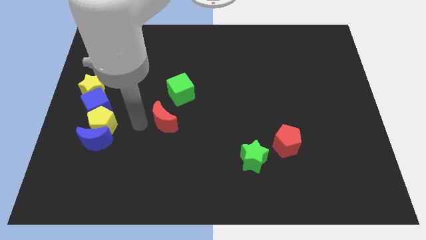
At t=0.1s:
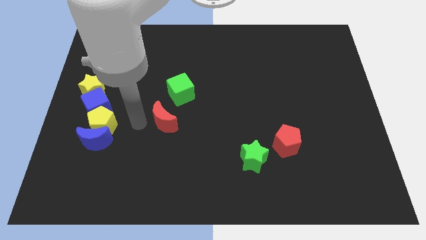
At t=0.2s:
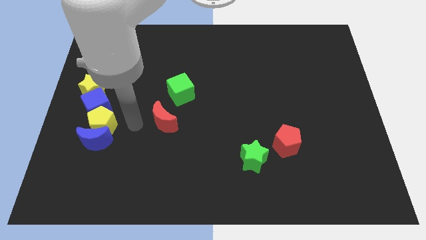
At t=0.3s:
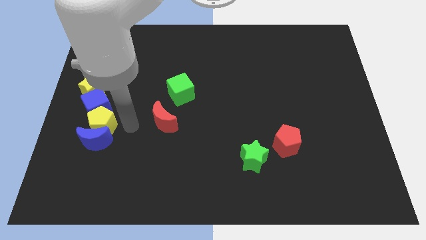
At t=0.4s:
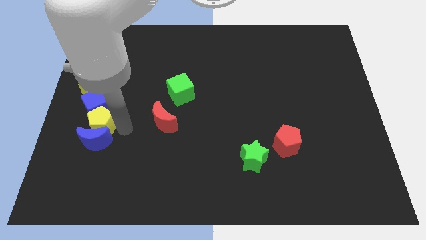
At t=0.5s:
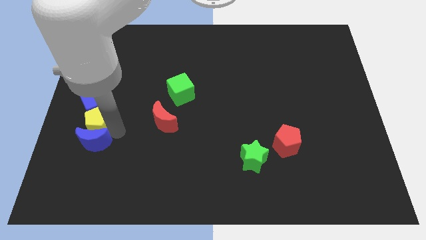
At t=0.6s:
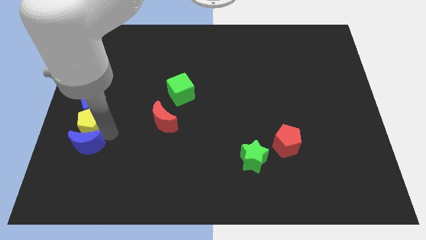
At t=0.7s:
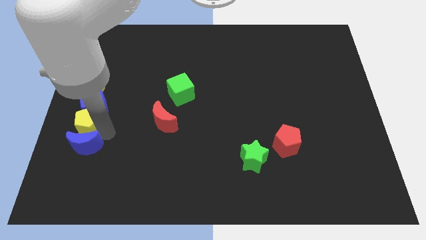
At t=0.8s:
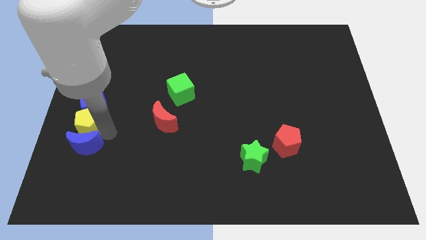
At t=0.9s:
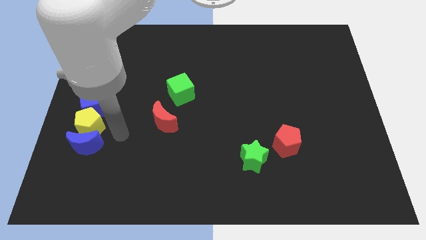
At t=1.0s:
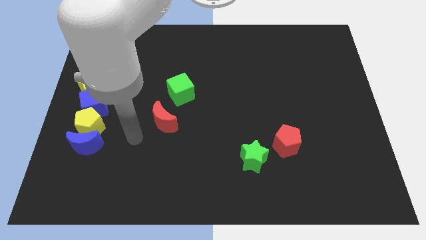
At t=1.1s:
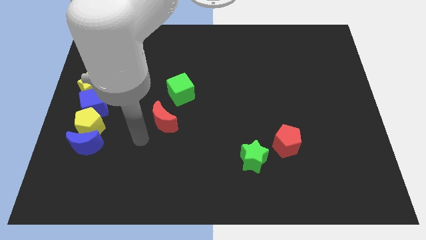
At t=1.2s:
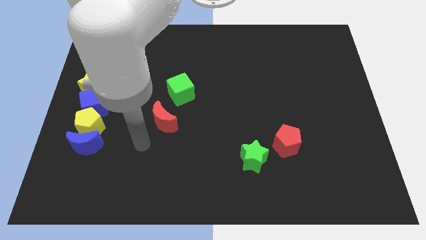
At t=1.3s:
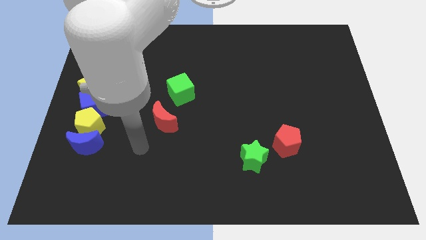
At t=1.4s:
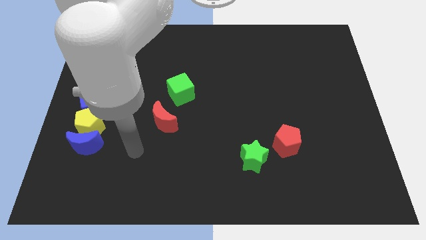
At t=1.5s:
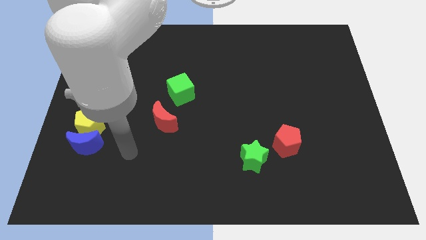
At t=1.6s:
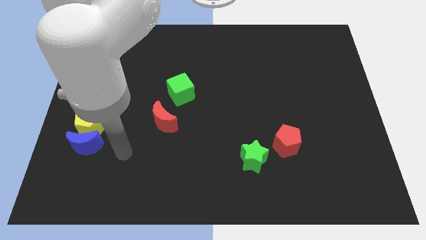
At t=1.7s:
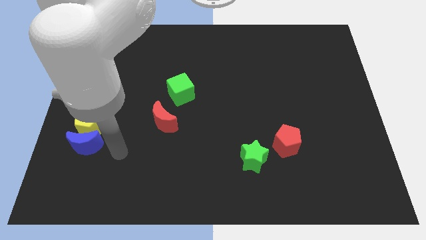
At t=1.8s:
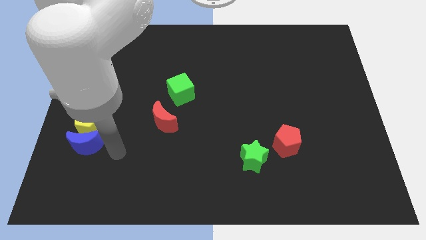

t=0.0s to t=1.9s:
place the yellow pentagon vertically in between the blue blocks

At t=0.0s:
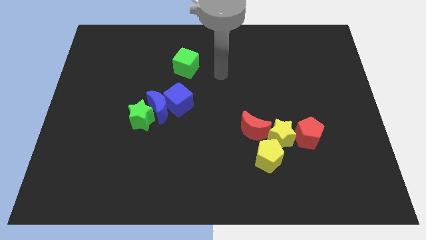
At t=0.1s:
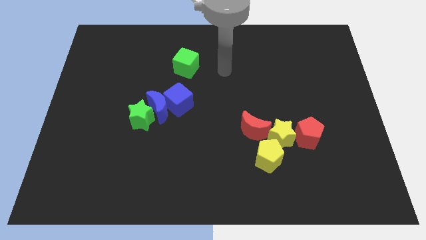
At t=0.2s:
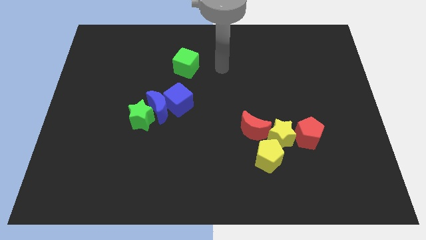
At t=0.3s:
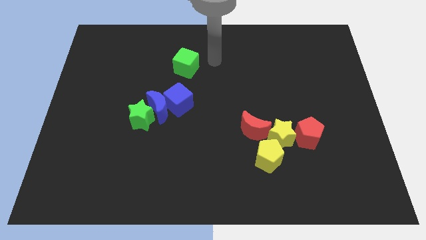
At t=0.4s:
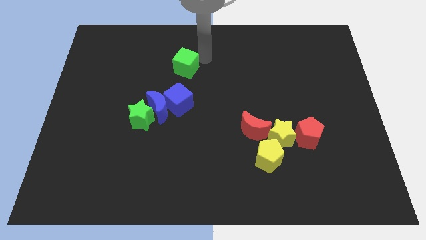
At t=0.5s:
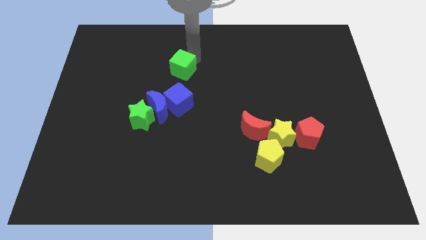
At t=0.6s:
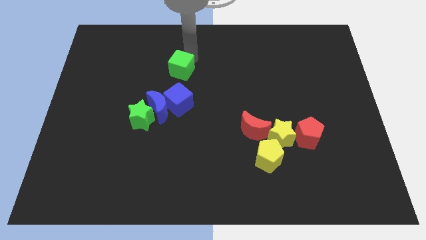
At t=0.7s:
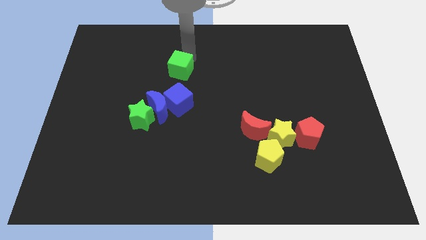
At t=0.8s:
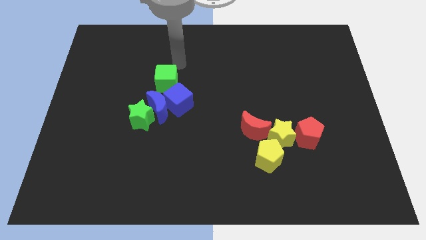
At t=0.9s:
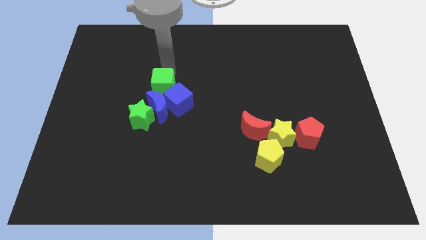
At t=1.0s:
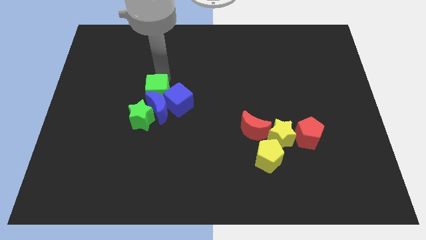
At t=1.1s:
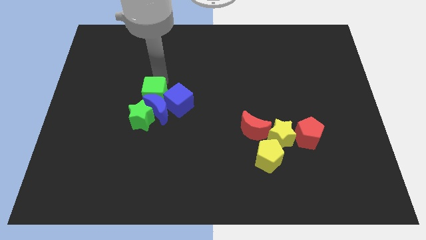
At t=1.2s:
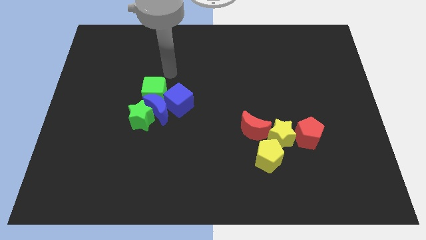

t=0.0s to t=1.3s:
move the green cube towards the blue crescent

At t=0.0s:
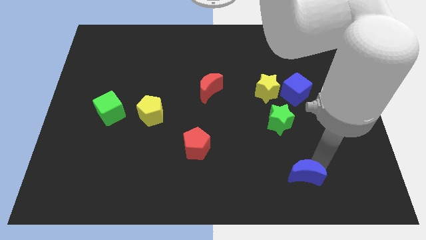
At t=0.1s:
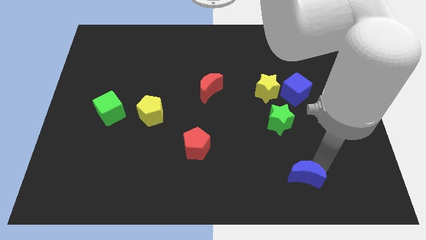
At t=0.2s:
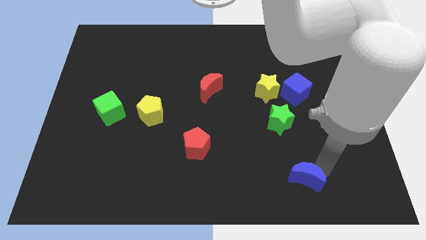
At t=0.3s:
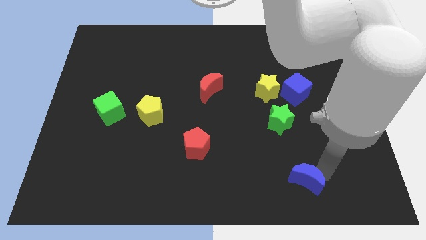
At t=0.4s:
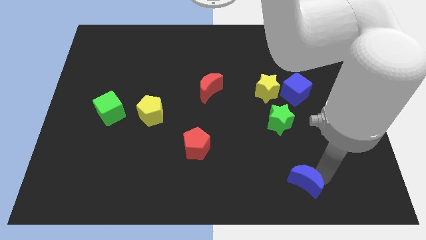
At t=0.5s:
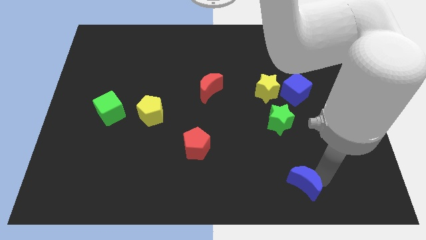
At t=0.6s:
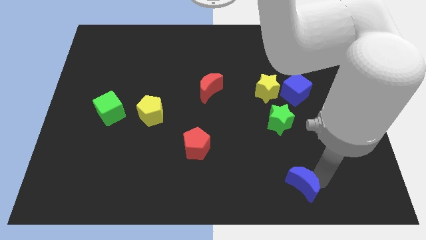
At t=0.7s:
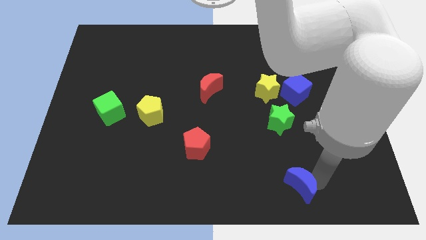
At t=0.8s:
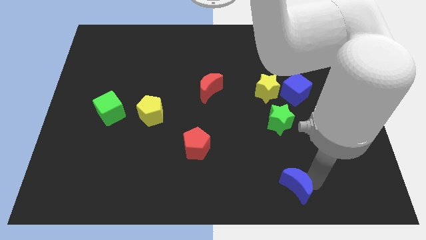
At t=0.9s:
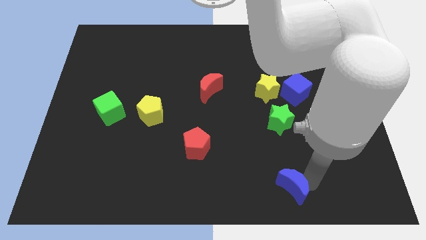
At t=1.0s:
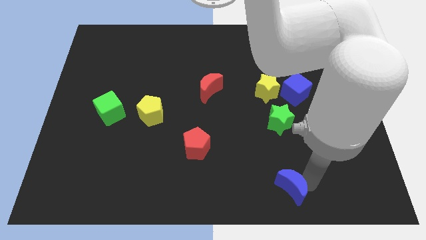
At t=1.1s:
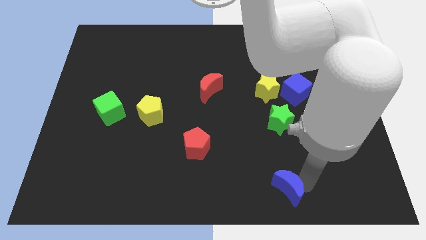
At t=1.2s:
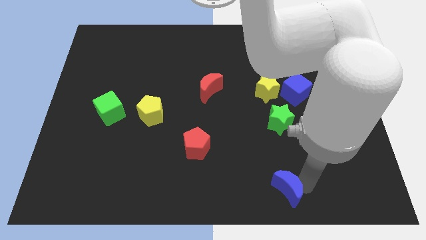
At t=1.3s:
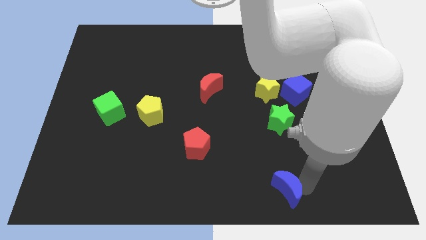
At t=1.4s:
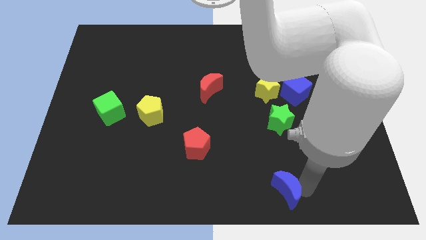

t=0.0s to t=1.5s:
push the blue crescent to the bottom of the green star

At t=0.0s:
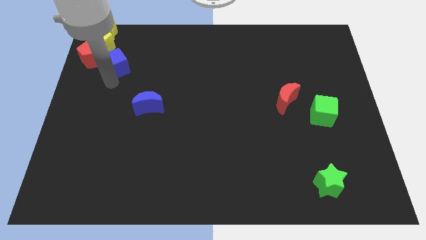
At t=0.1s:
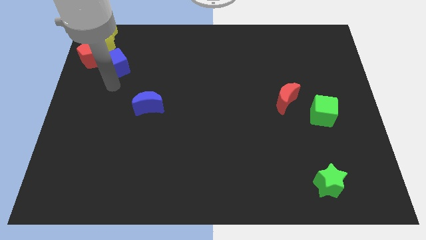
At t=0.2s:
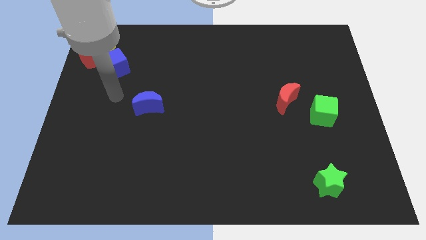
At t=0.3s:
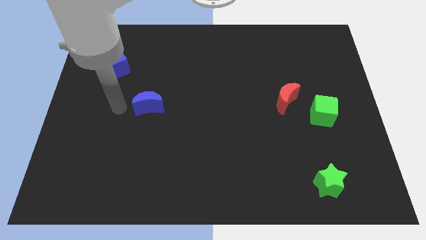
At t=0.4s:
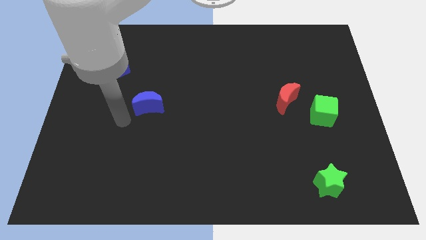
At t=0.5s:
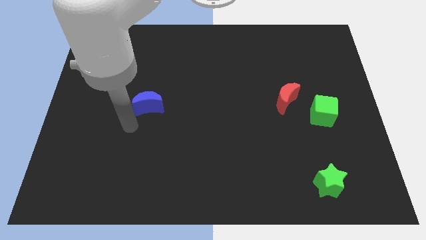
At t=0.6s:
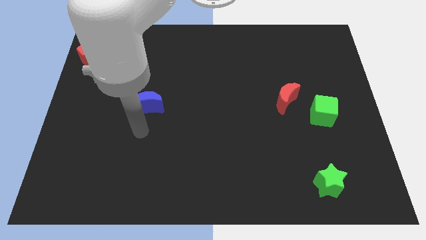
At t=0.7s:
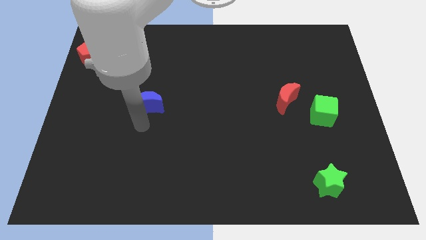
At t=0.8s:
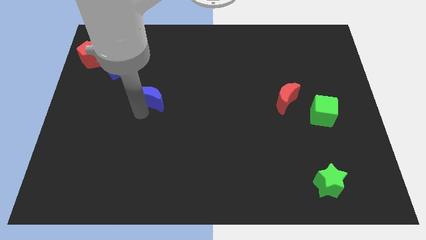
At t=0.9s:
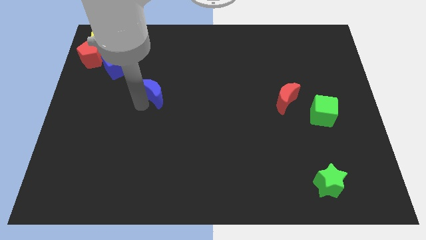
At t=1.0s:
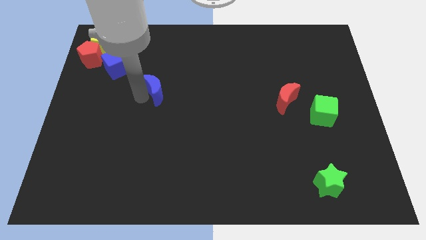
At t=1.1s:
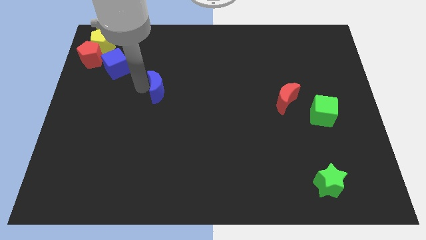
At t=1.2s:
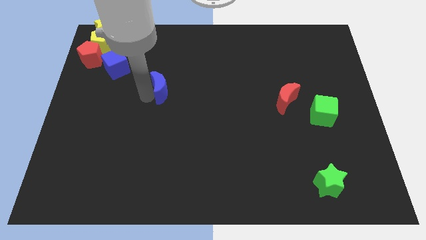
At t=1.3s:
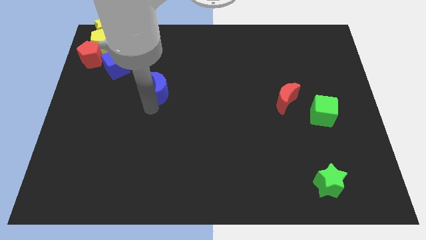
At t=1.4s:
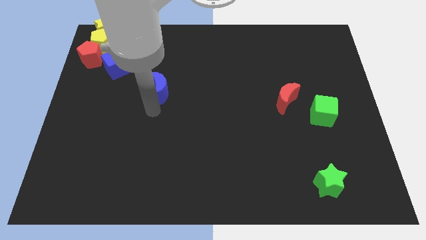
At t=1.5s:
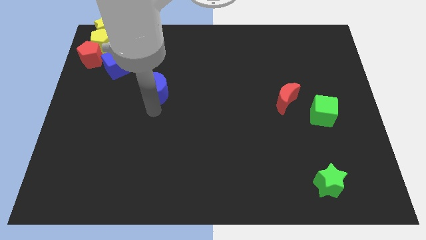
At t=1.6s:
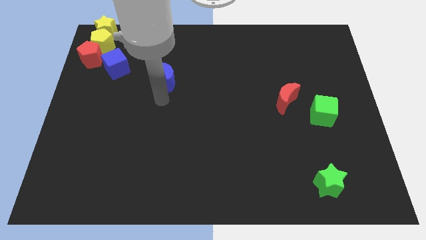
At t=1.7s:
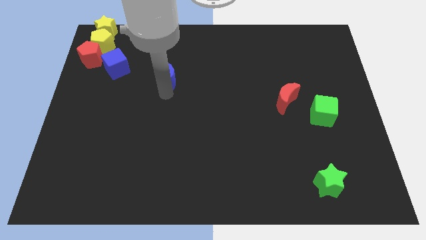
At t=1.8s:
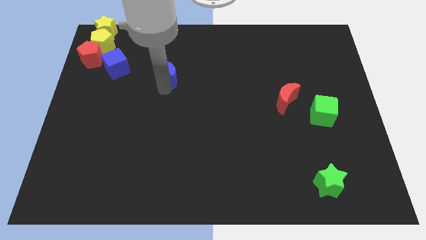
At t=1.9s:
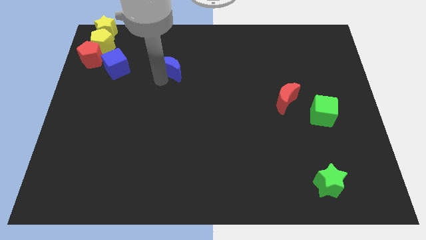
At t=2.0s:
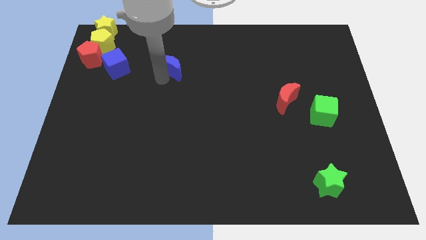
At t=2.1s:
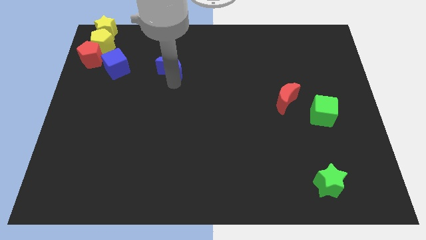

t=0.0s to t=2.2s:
place blue moon parallel to blue cube

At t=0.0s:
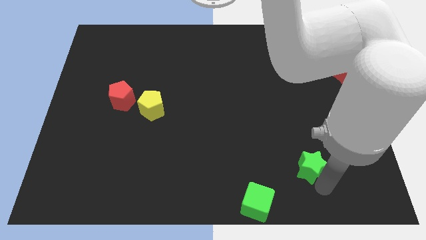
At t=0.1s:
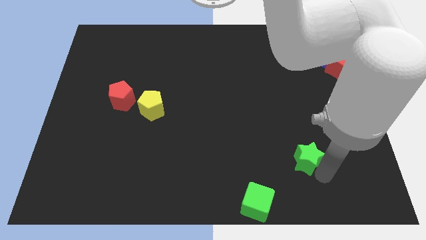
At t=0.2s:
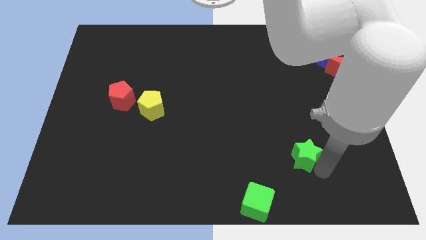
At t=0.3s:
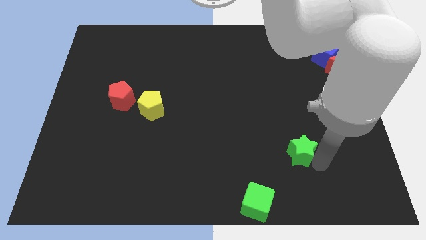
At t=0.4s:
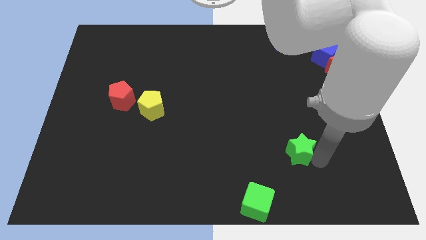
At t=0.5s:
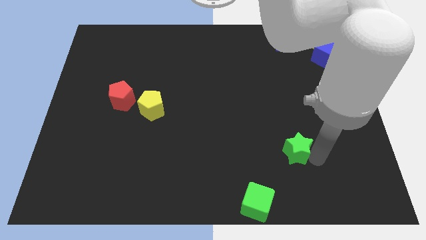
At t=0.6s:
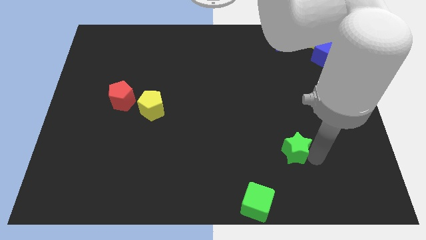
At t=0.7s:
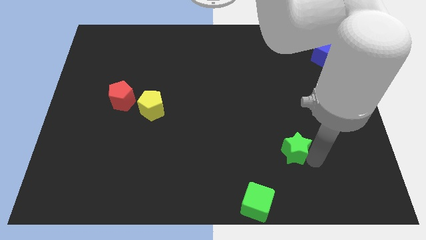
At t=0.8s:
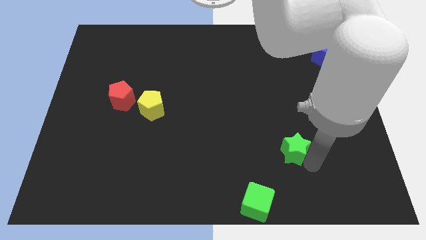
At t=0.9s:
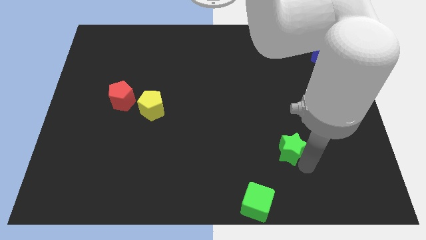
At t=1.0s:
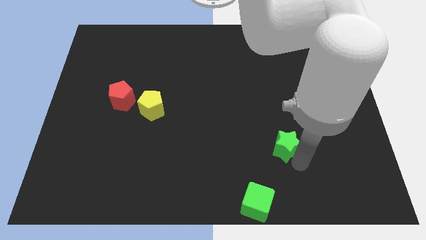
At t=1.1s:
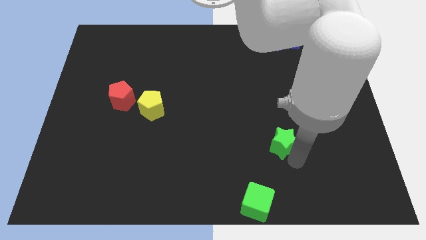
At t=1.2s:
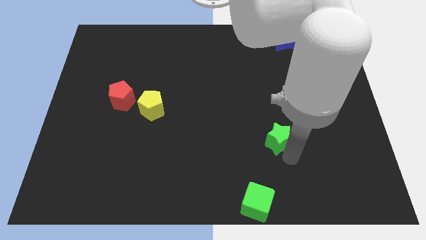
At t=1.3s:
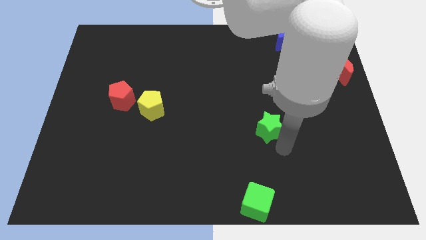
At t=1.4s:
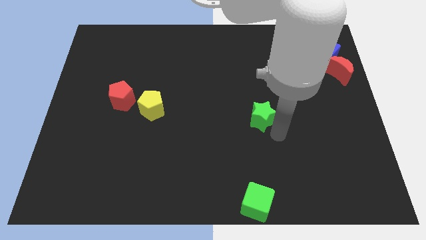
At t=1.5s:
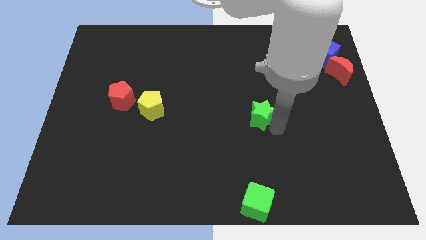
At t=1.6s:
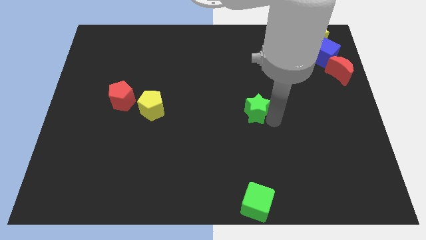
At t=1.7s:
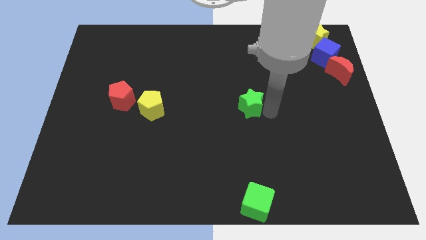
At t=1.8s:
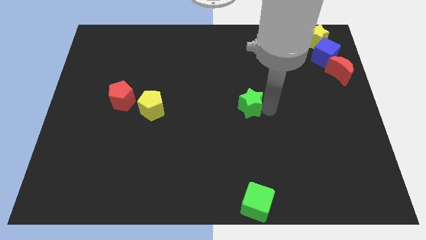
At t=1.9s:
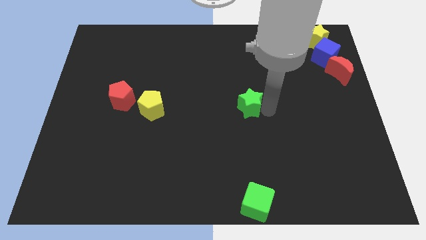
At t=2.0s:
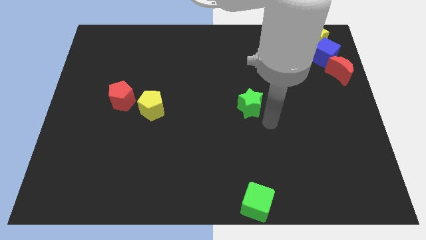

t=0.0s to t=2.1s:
drag green star above the green cube
